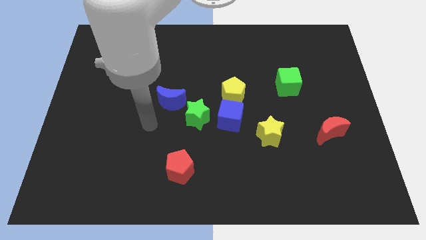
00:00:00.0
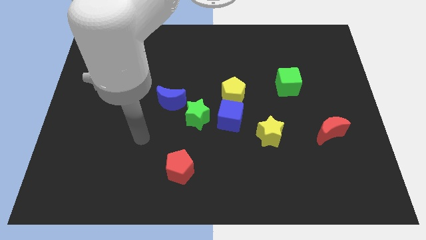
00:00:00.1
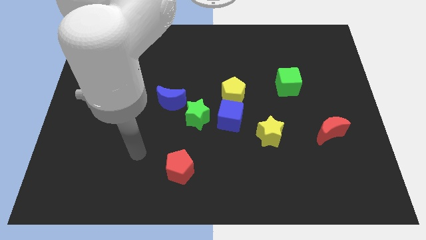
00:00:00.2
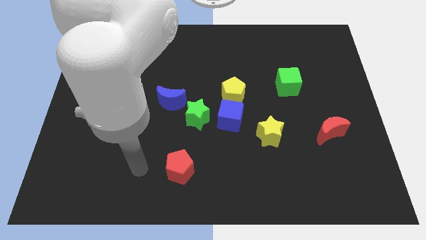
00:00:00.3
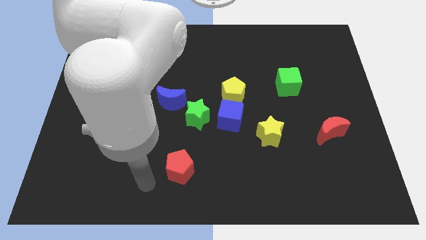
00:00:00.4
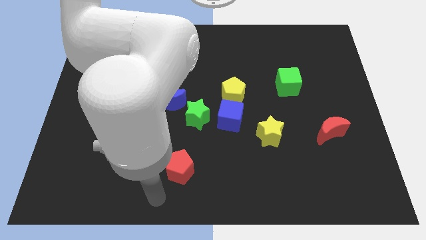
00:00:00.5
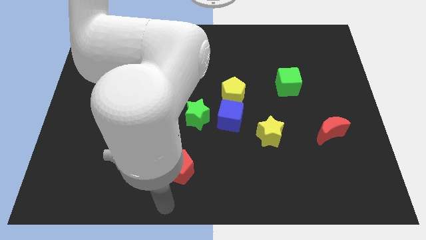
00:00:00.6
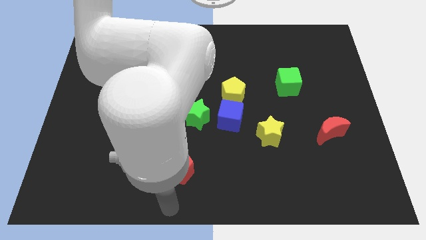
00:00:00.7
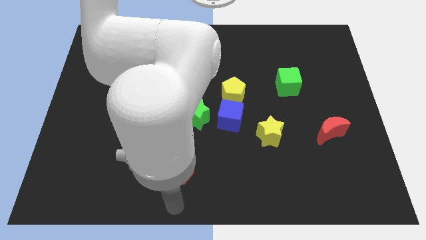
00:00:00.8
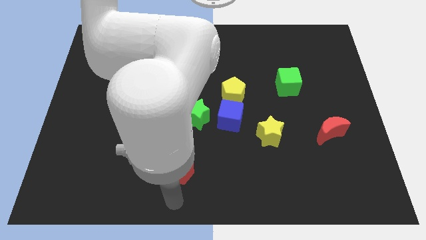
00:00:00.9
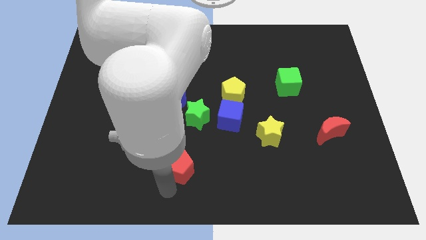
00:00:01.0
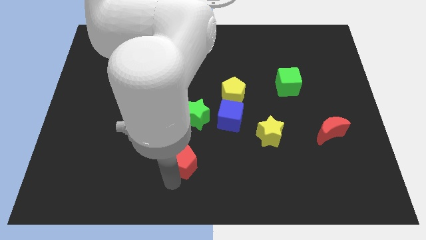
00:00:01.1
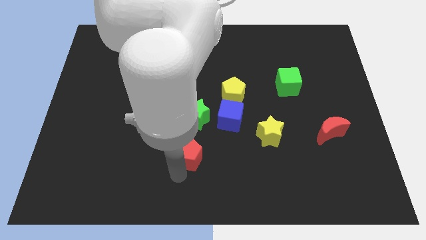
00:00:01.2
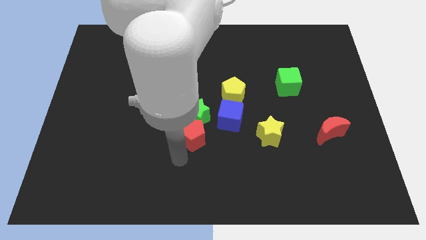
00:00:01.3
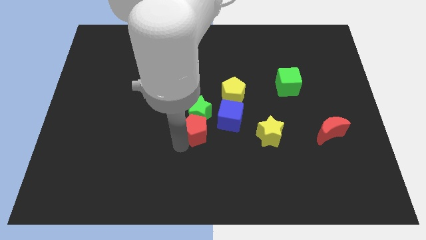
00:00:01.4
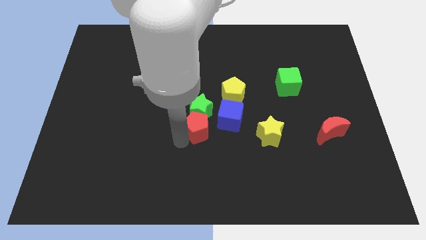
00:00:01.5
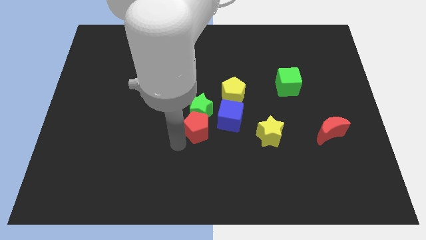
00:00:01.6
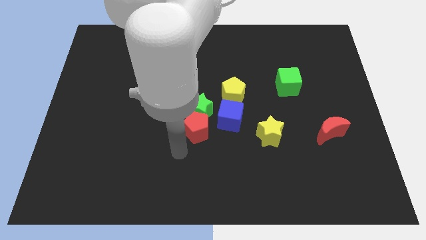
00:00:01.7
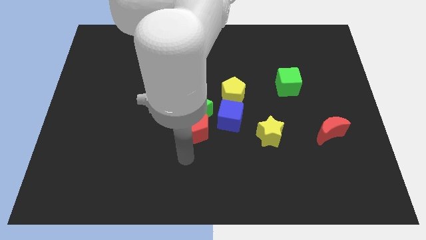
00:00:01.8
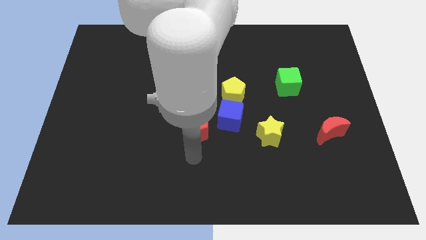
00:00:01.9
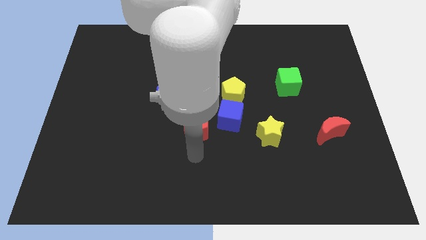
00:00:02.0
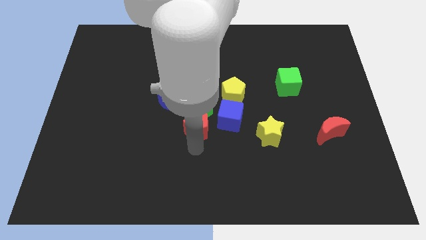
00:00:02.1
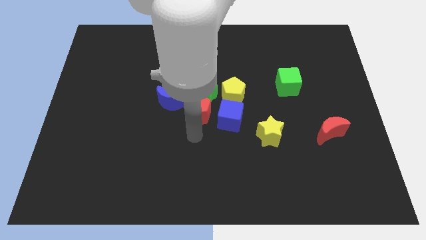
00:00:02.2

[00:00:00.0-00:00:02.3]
push red pentagon into green star

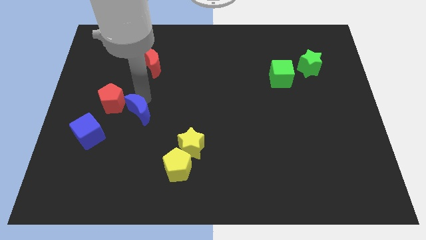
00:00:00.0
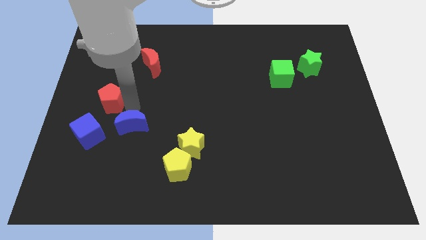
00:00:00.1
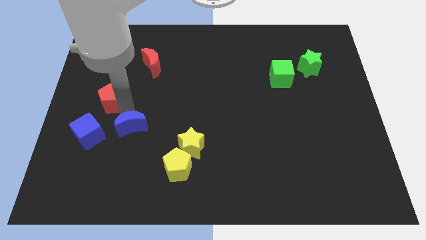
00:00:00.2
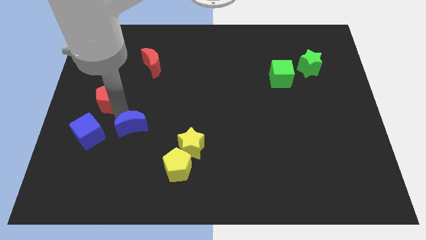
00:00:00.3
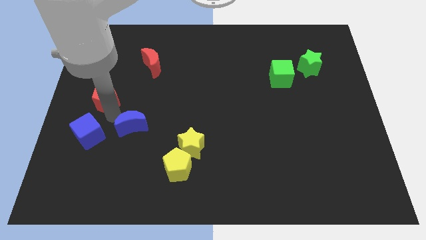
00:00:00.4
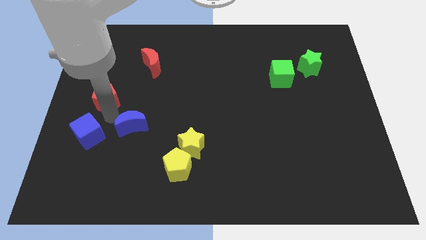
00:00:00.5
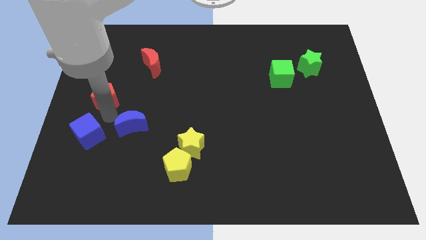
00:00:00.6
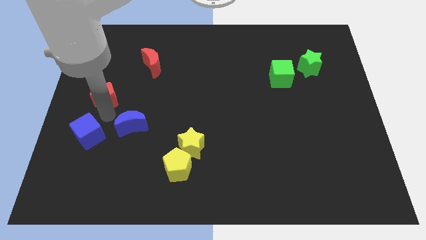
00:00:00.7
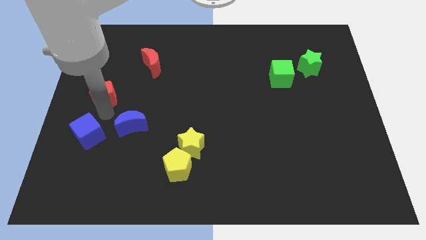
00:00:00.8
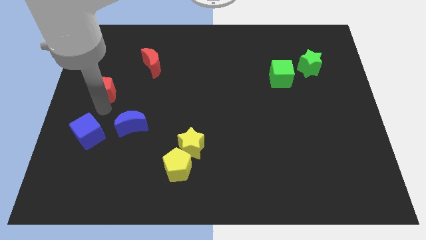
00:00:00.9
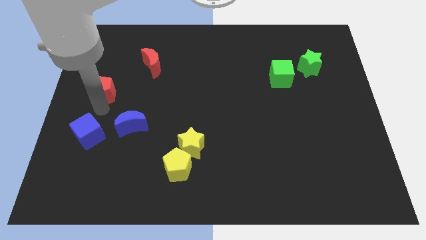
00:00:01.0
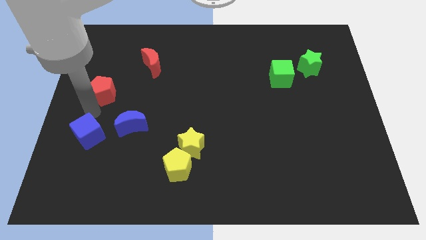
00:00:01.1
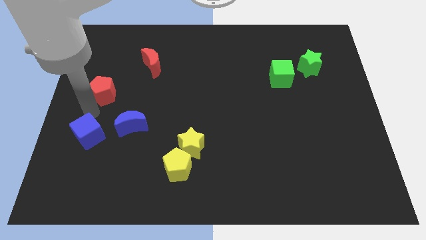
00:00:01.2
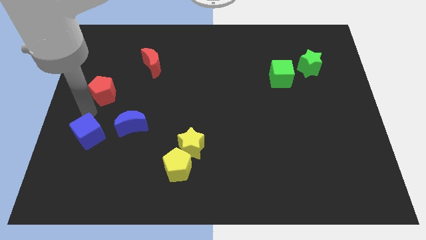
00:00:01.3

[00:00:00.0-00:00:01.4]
place blue crescent to the right of the blue cube

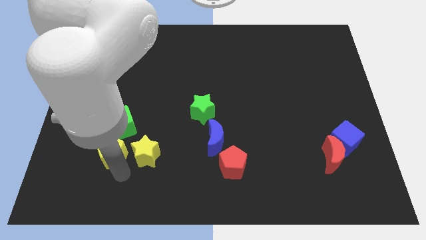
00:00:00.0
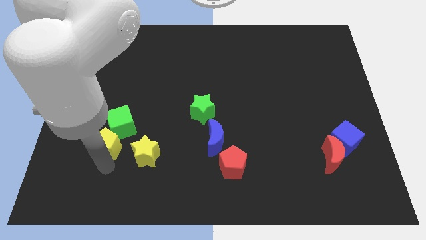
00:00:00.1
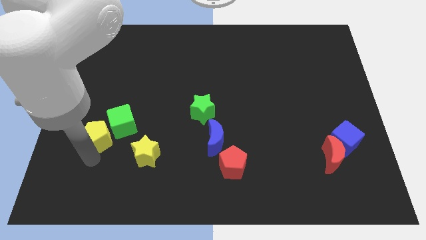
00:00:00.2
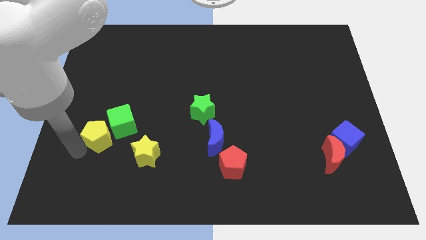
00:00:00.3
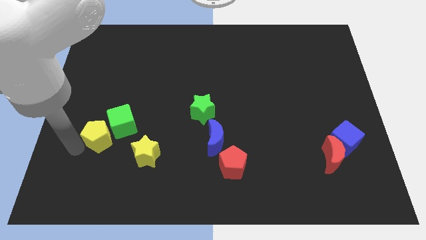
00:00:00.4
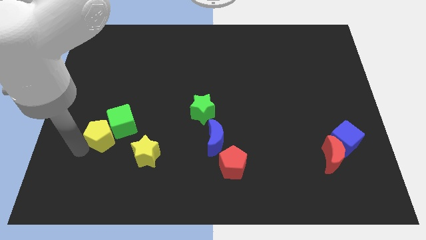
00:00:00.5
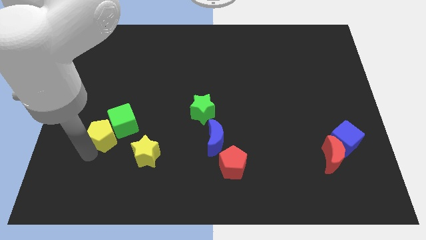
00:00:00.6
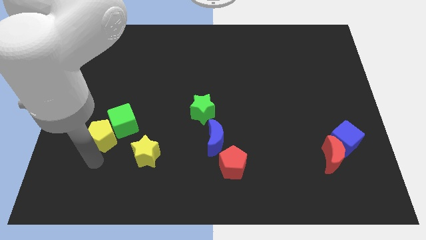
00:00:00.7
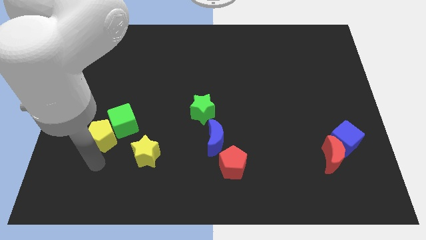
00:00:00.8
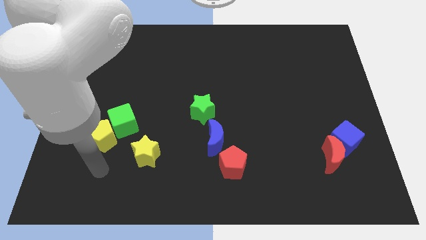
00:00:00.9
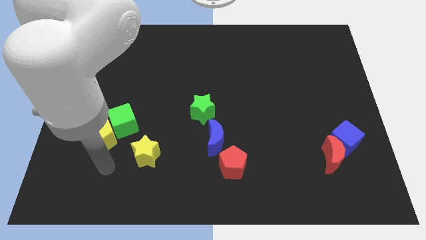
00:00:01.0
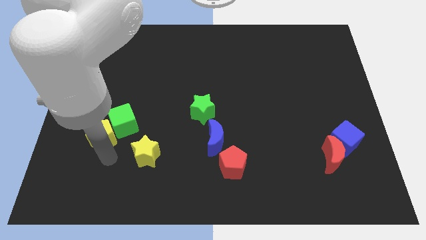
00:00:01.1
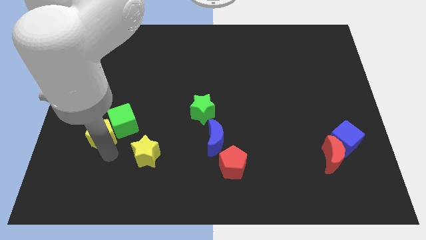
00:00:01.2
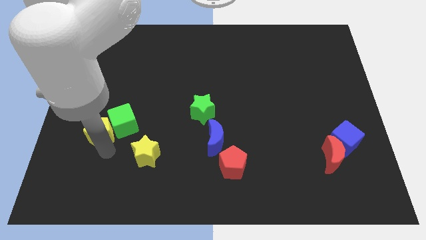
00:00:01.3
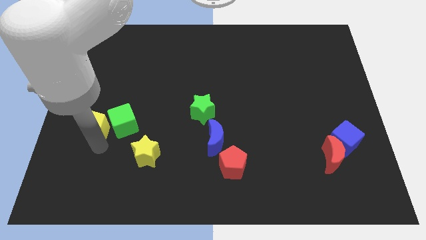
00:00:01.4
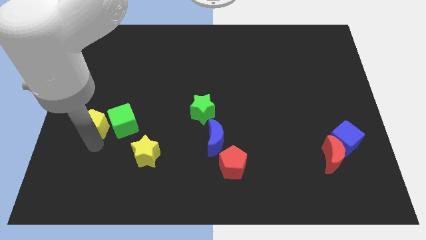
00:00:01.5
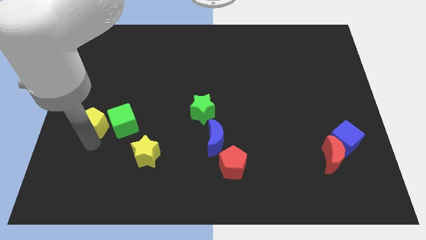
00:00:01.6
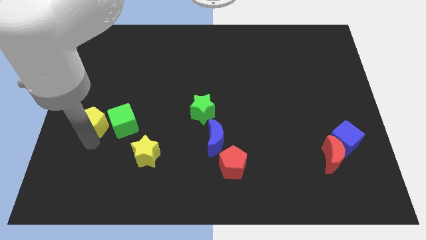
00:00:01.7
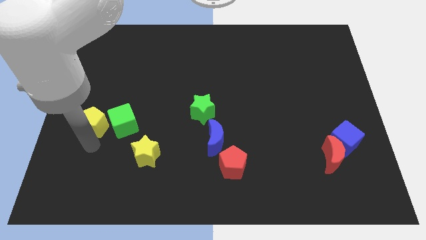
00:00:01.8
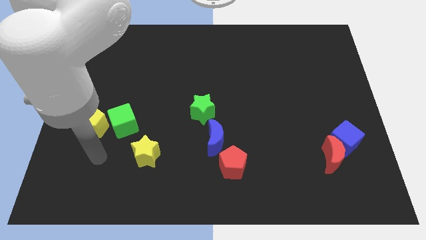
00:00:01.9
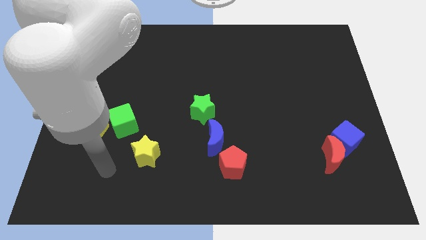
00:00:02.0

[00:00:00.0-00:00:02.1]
move the yellow pentagon to the left of the green cube

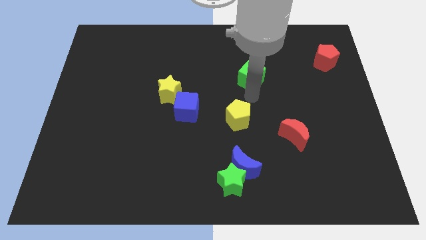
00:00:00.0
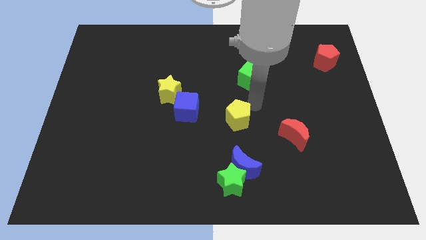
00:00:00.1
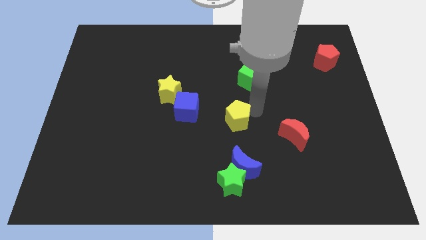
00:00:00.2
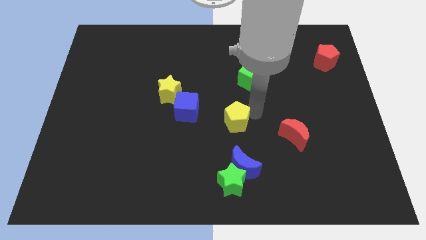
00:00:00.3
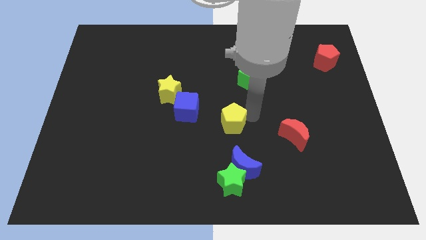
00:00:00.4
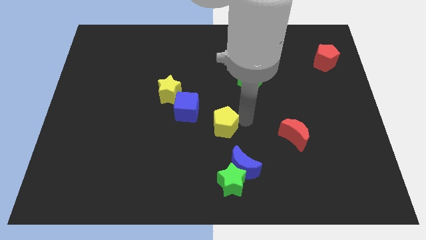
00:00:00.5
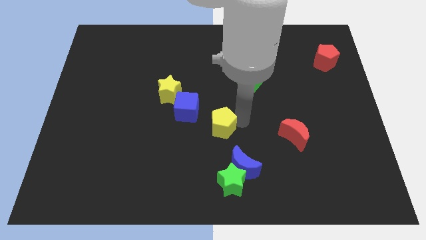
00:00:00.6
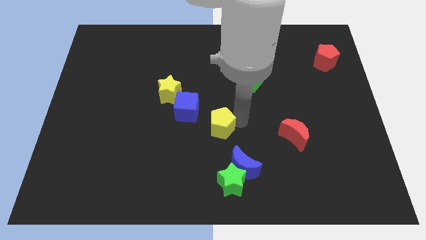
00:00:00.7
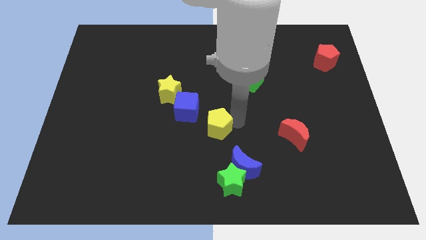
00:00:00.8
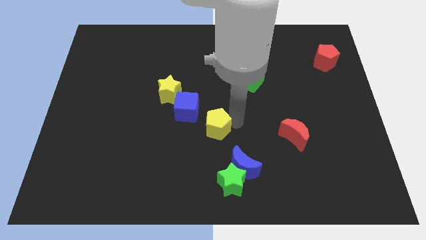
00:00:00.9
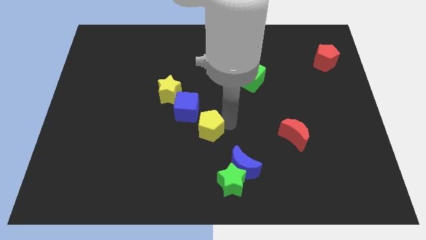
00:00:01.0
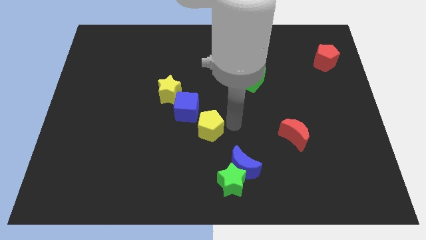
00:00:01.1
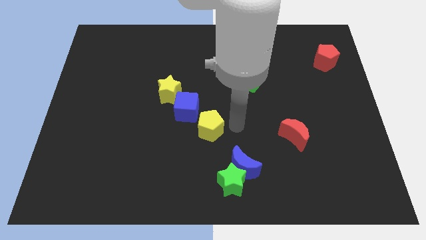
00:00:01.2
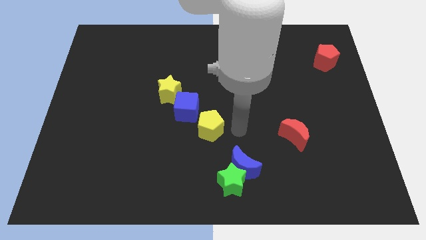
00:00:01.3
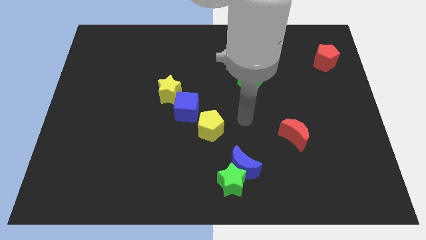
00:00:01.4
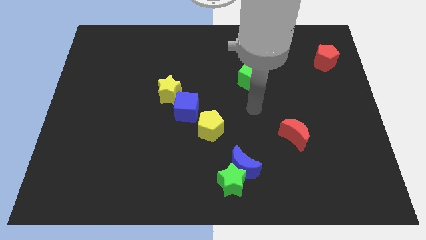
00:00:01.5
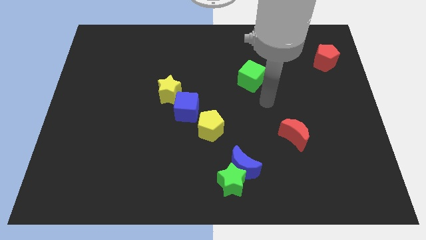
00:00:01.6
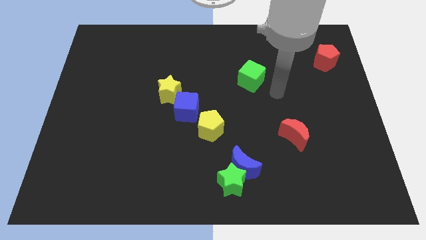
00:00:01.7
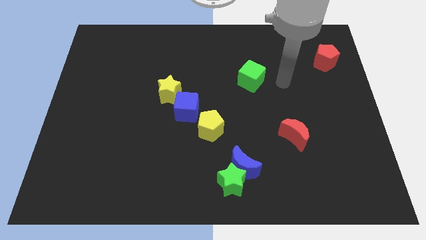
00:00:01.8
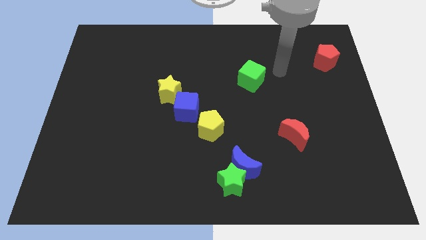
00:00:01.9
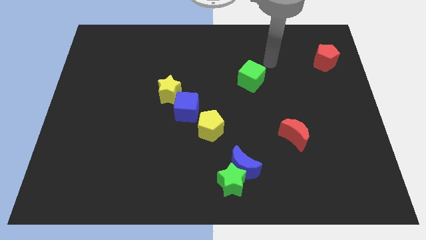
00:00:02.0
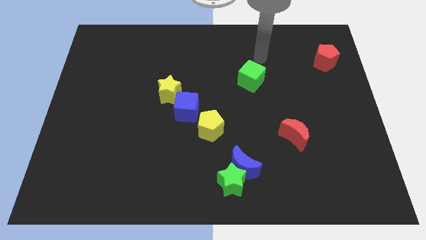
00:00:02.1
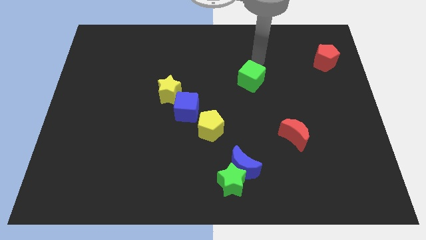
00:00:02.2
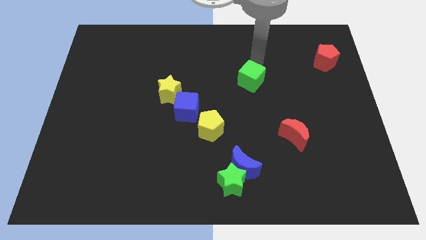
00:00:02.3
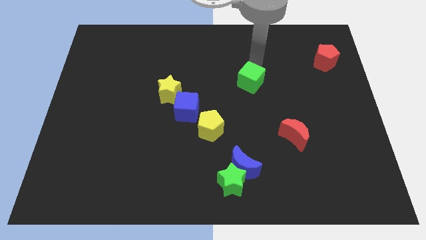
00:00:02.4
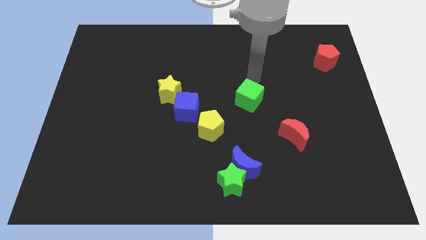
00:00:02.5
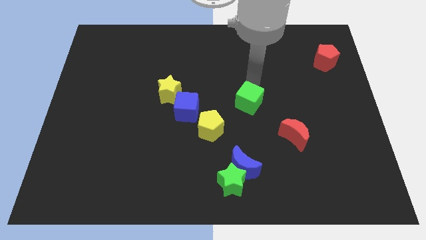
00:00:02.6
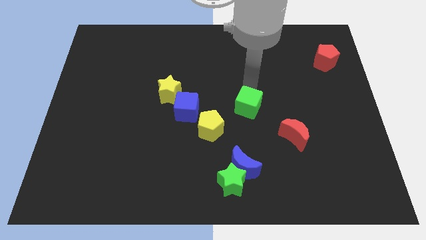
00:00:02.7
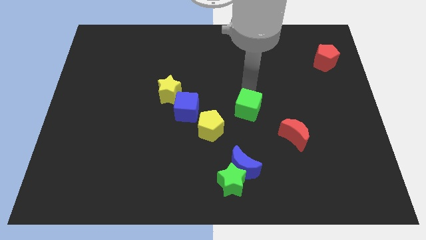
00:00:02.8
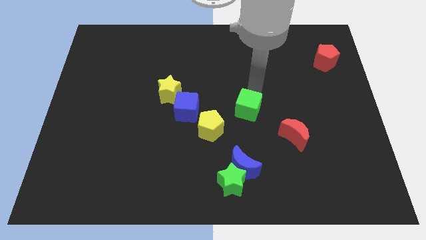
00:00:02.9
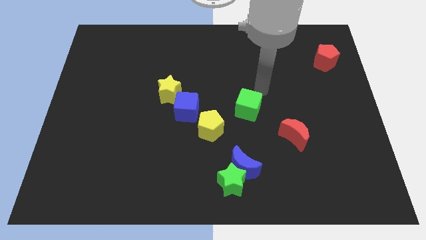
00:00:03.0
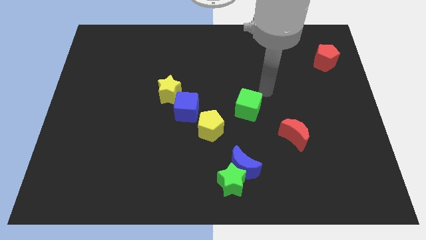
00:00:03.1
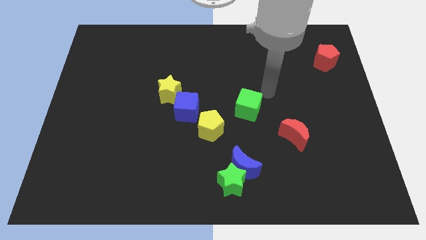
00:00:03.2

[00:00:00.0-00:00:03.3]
place the green cube diagonal right to the yellow pentagon
